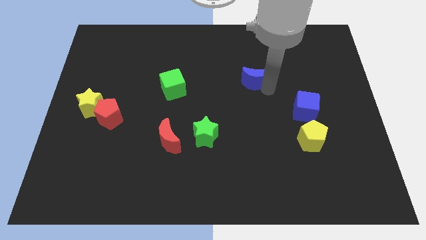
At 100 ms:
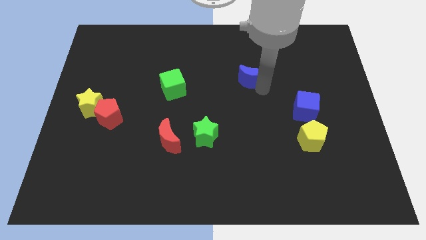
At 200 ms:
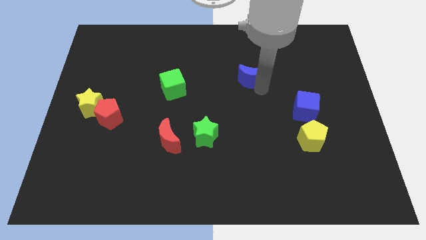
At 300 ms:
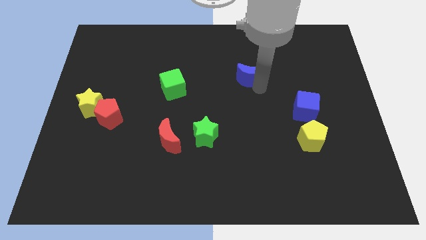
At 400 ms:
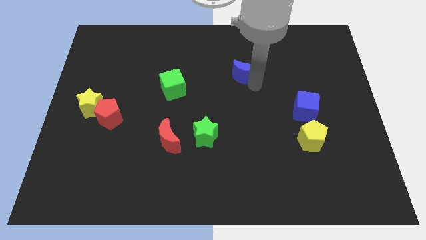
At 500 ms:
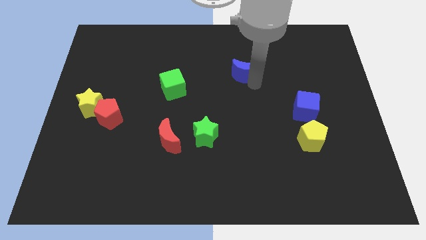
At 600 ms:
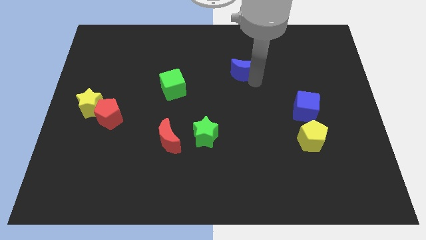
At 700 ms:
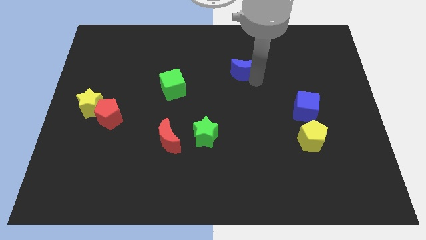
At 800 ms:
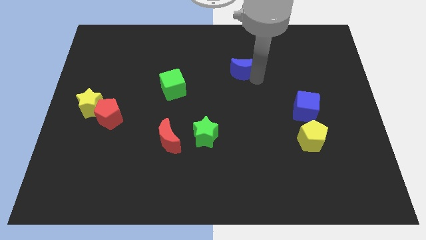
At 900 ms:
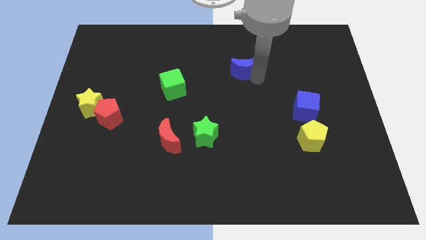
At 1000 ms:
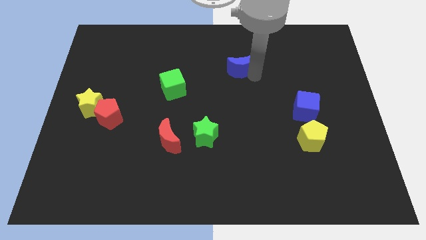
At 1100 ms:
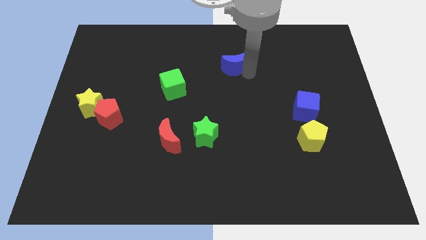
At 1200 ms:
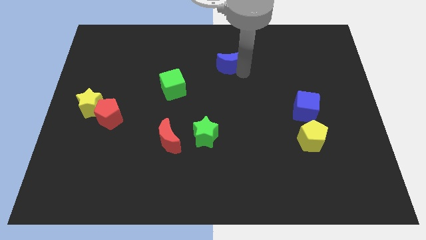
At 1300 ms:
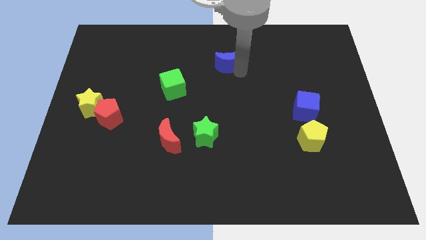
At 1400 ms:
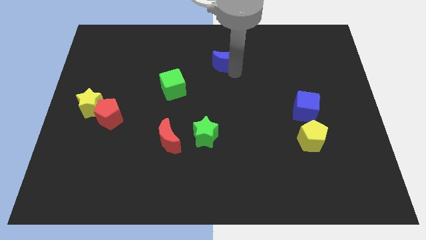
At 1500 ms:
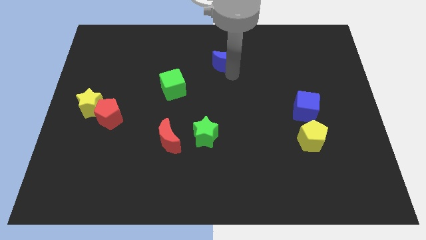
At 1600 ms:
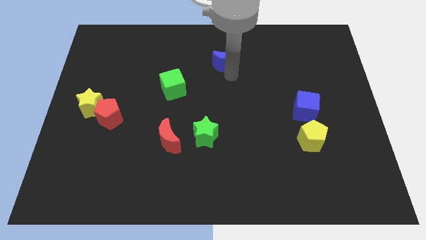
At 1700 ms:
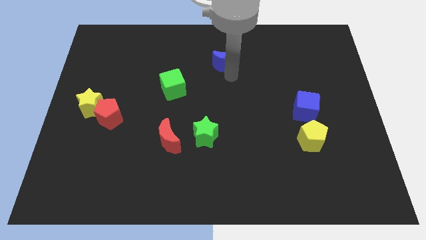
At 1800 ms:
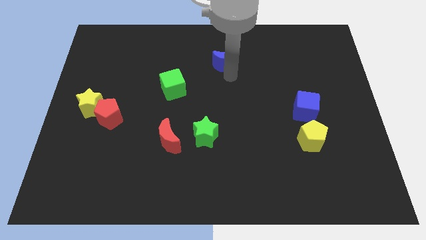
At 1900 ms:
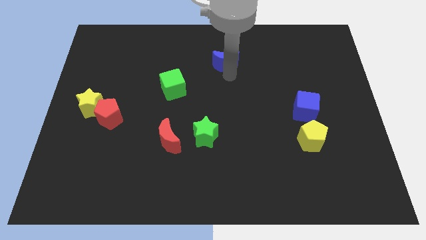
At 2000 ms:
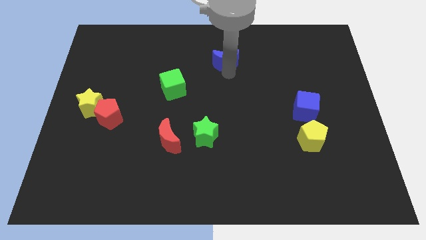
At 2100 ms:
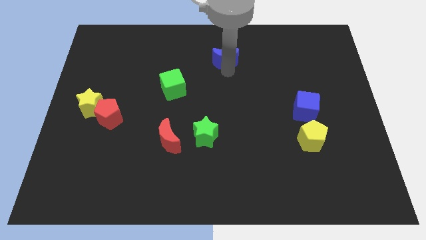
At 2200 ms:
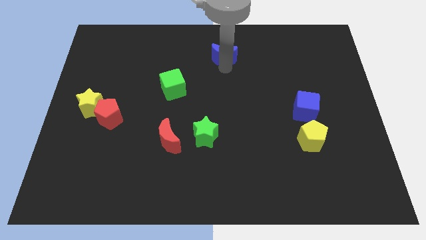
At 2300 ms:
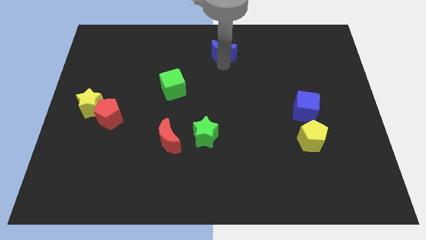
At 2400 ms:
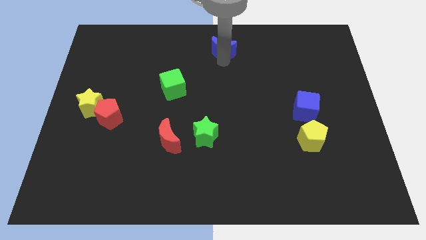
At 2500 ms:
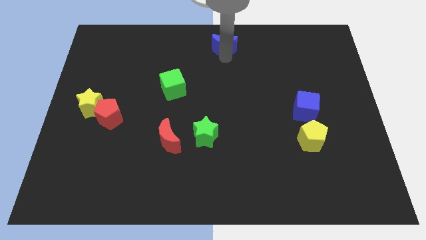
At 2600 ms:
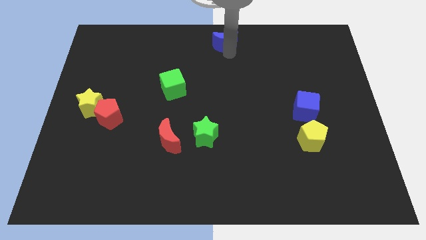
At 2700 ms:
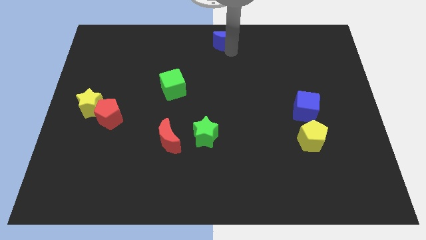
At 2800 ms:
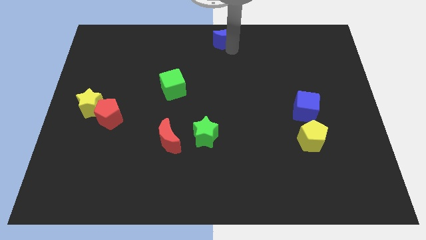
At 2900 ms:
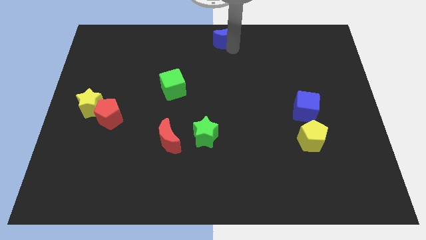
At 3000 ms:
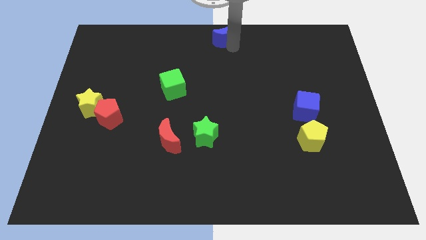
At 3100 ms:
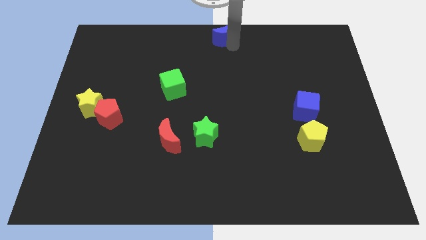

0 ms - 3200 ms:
move the blue crescent to the top center of the board

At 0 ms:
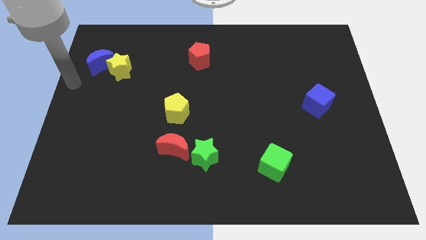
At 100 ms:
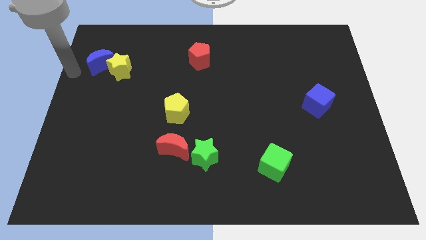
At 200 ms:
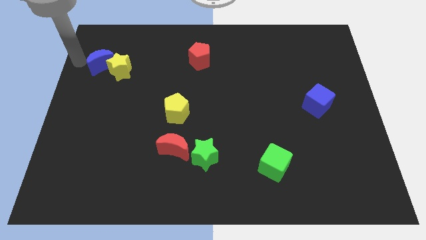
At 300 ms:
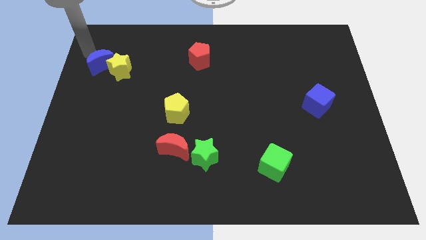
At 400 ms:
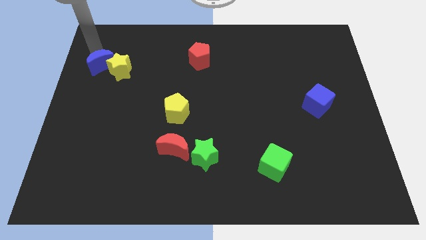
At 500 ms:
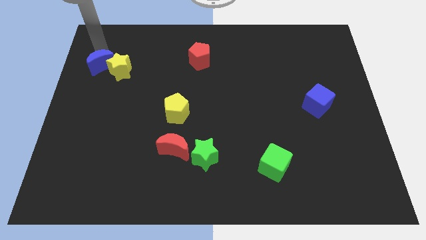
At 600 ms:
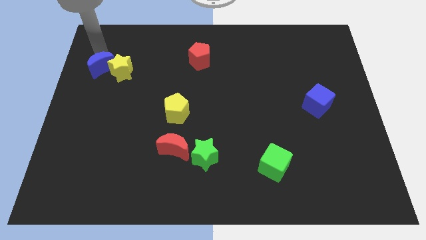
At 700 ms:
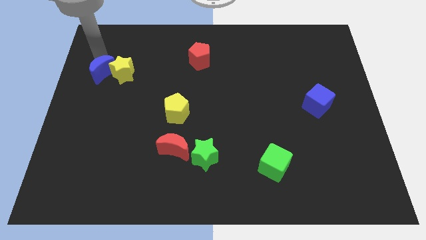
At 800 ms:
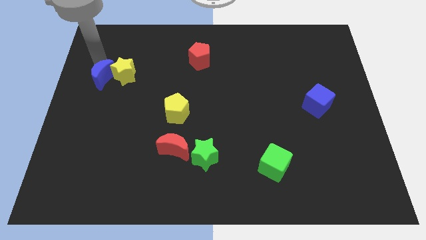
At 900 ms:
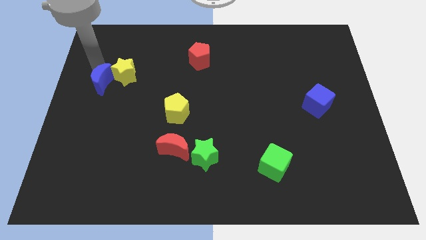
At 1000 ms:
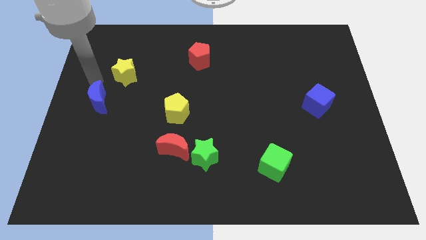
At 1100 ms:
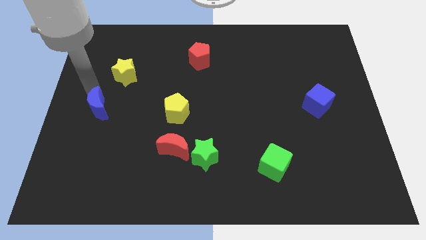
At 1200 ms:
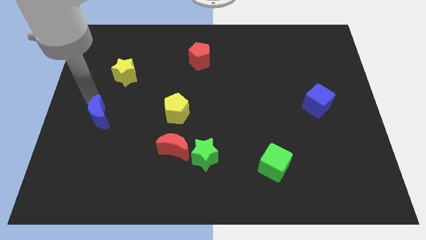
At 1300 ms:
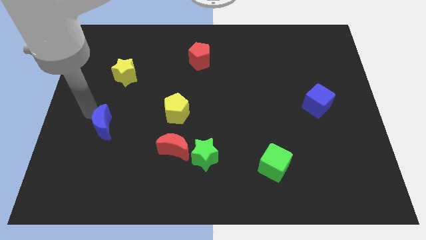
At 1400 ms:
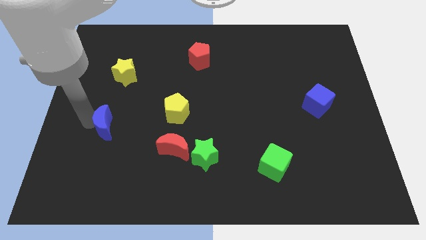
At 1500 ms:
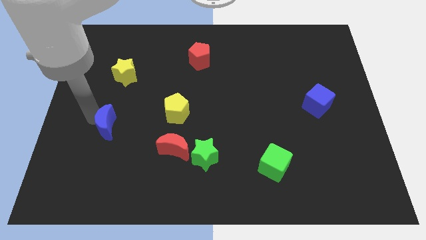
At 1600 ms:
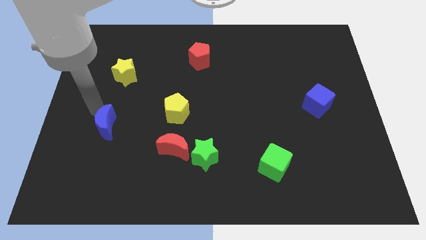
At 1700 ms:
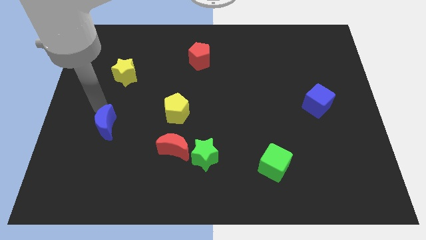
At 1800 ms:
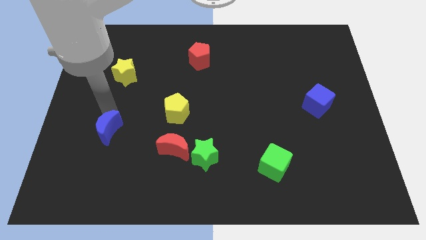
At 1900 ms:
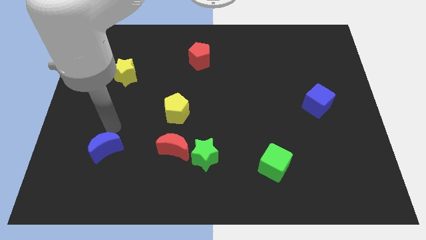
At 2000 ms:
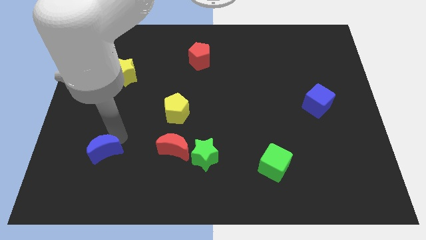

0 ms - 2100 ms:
place the blue moon parallel to the red moon

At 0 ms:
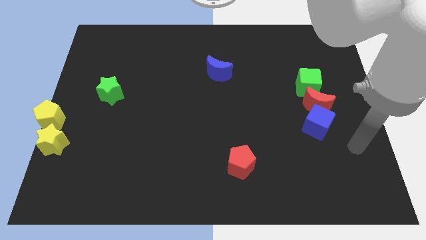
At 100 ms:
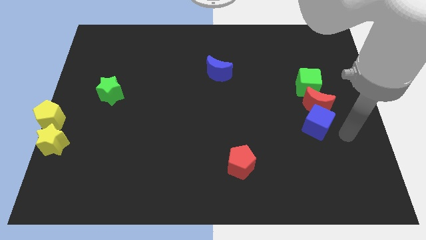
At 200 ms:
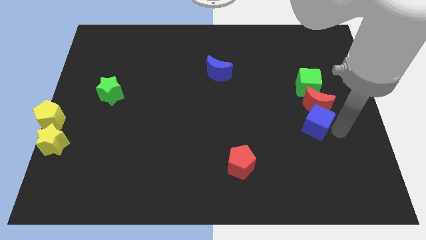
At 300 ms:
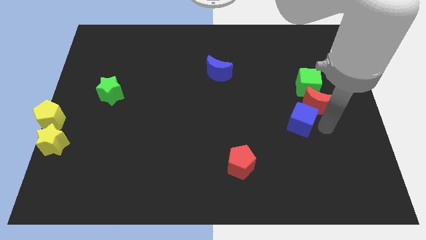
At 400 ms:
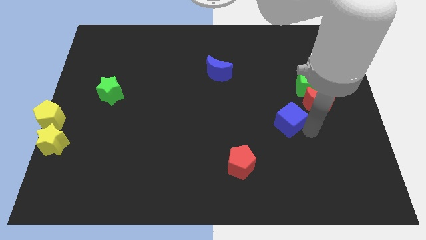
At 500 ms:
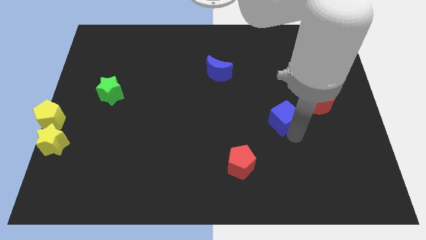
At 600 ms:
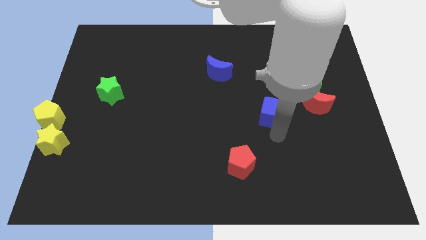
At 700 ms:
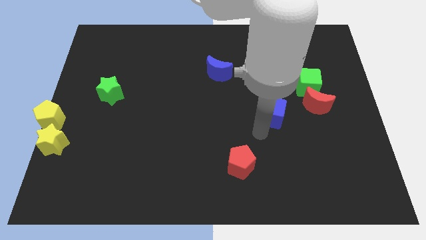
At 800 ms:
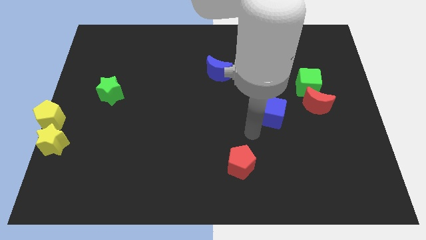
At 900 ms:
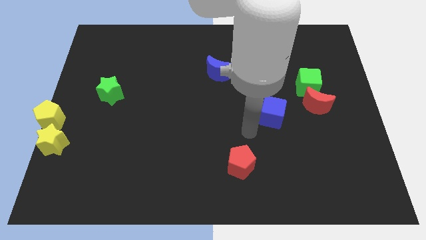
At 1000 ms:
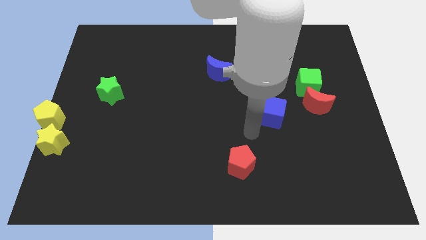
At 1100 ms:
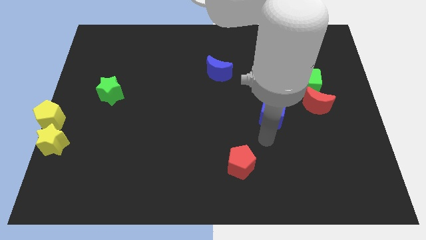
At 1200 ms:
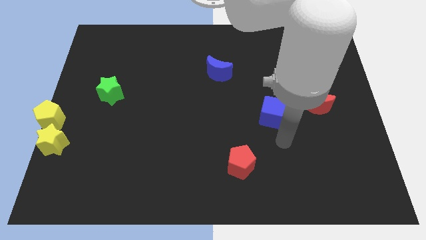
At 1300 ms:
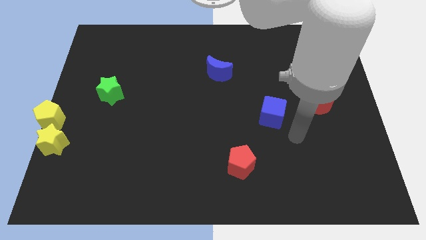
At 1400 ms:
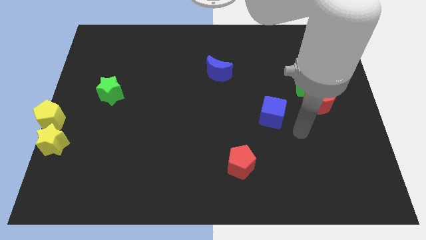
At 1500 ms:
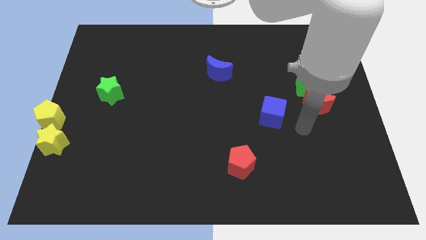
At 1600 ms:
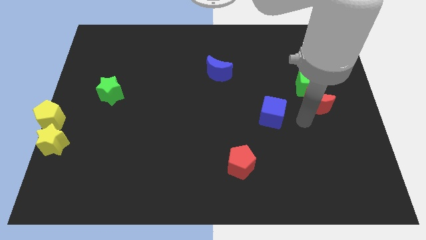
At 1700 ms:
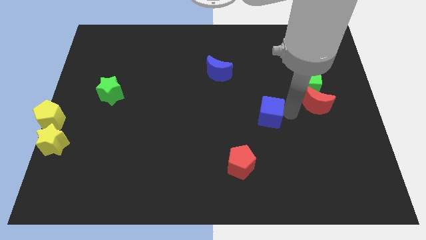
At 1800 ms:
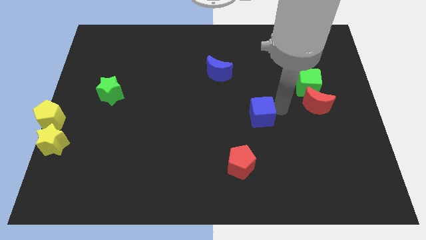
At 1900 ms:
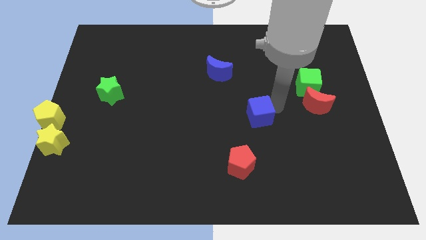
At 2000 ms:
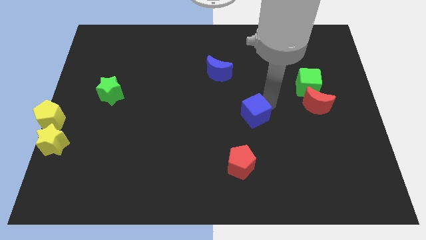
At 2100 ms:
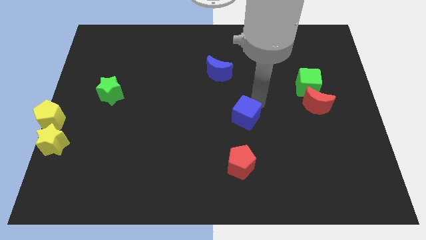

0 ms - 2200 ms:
push the blue cube above to the red pentagon

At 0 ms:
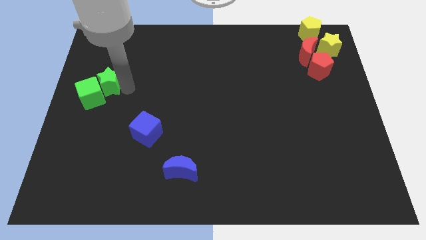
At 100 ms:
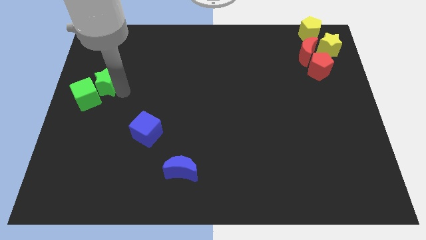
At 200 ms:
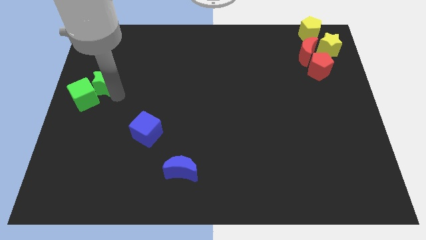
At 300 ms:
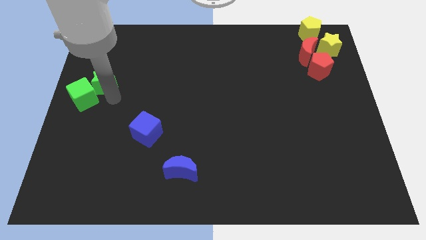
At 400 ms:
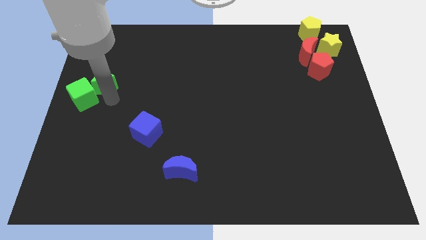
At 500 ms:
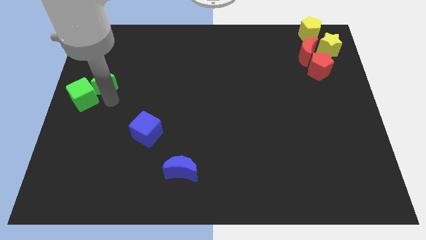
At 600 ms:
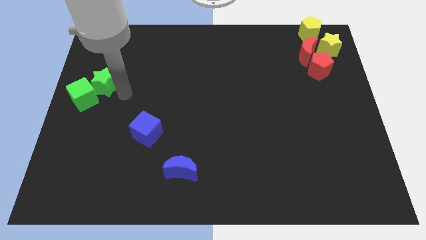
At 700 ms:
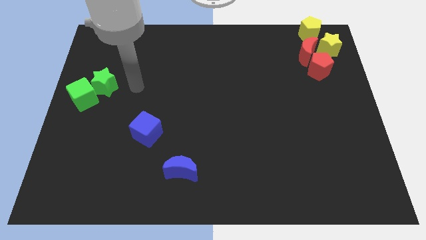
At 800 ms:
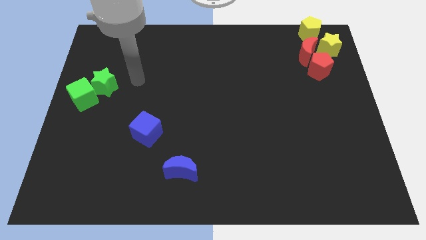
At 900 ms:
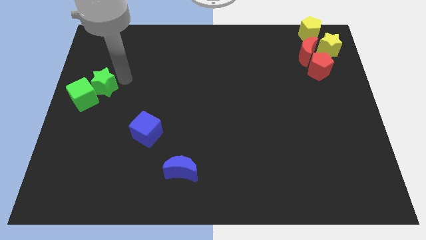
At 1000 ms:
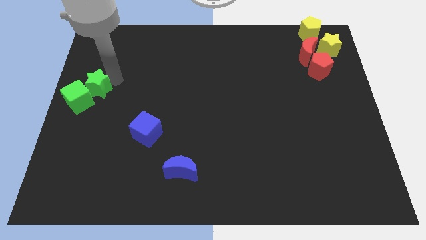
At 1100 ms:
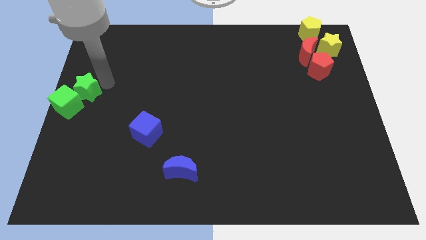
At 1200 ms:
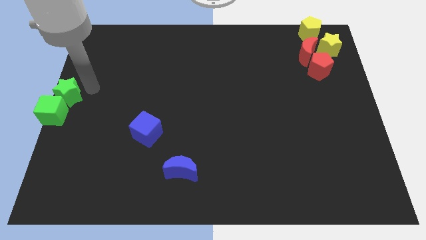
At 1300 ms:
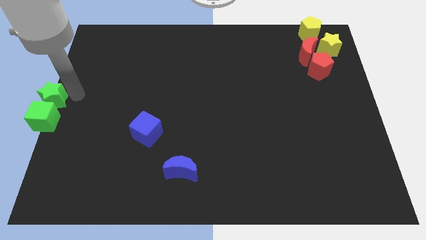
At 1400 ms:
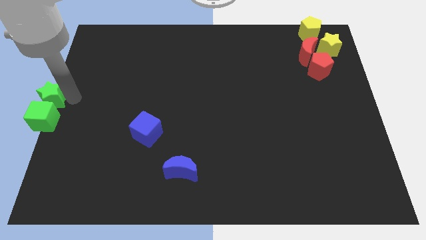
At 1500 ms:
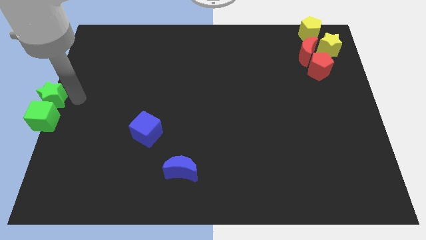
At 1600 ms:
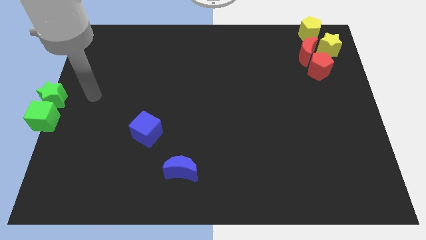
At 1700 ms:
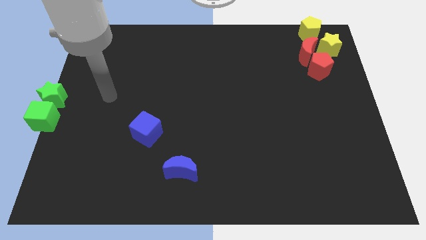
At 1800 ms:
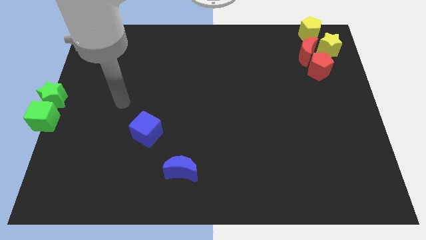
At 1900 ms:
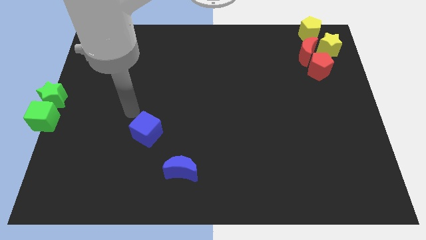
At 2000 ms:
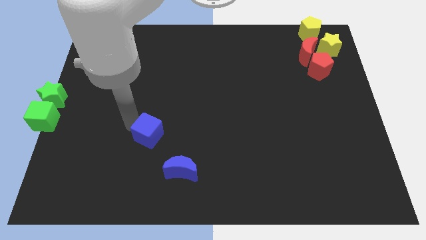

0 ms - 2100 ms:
move green blocks to the center left corner of the board
